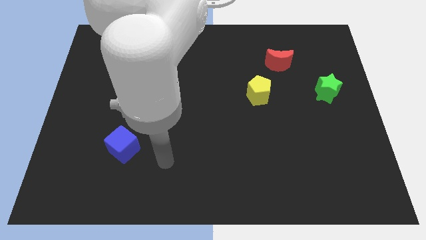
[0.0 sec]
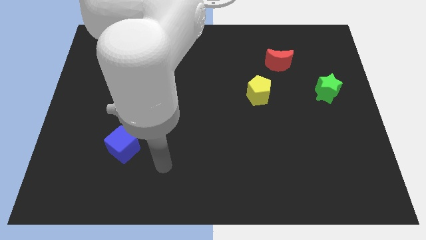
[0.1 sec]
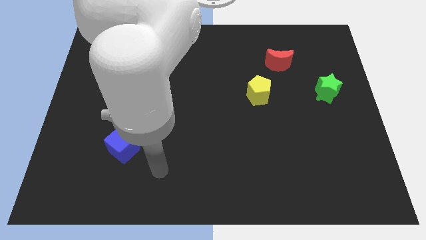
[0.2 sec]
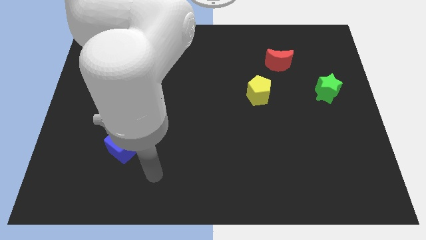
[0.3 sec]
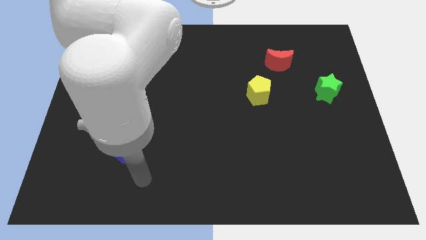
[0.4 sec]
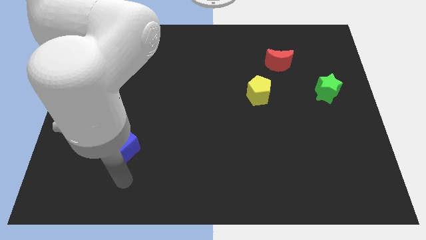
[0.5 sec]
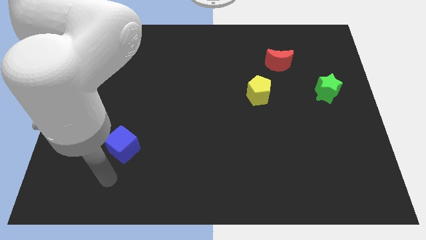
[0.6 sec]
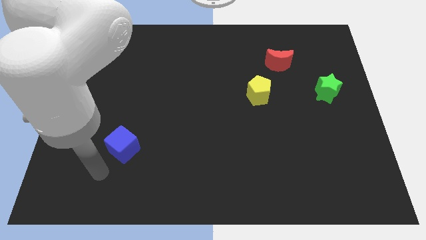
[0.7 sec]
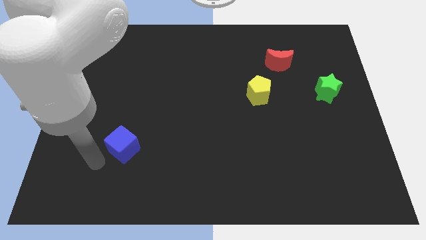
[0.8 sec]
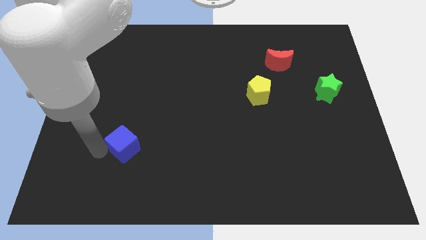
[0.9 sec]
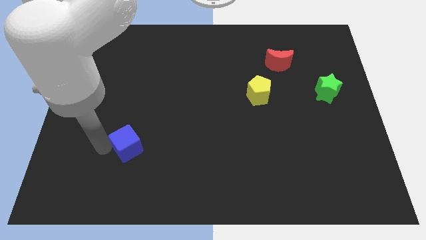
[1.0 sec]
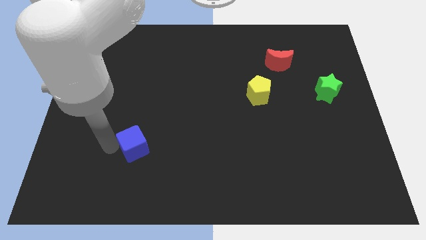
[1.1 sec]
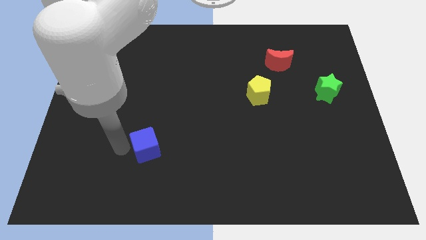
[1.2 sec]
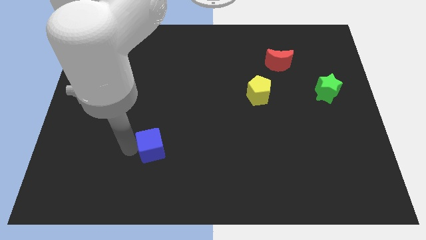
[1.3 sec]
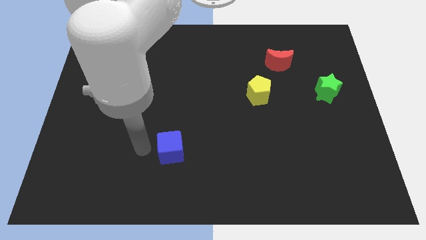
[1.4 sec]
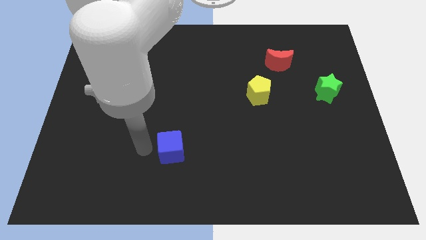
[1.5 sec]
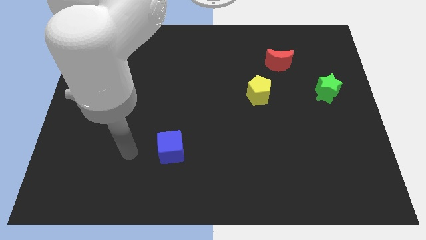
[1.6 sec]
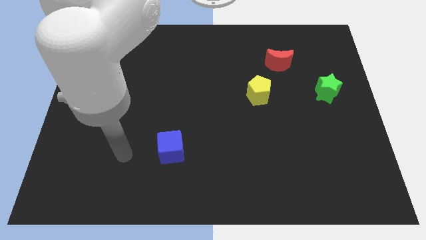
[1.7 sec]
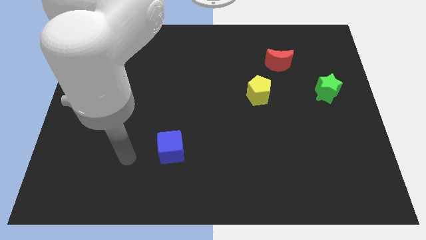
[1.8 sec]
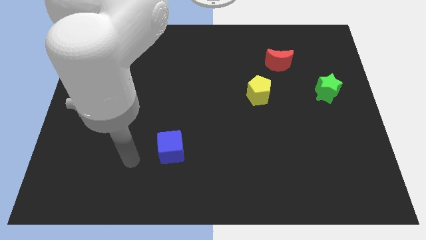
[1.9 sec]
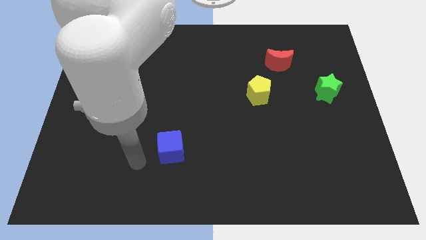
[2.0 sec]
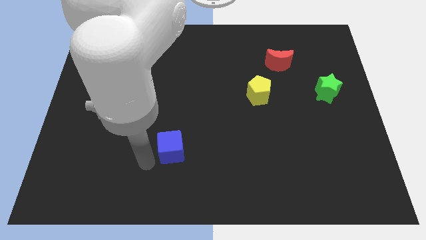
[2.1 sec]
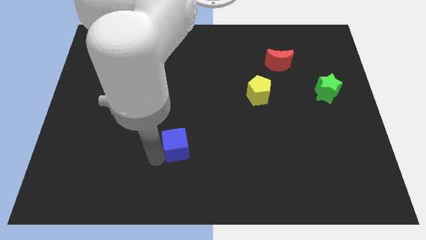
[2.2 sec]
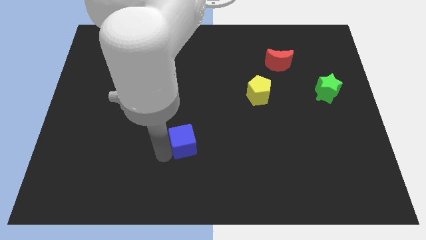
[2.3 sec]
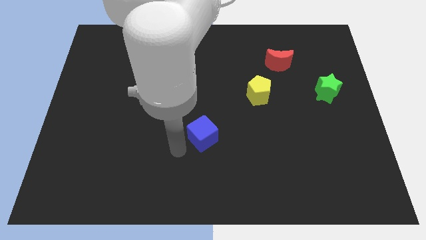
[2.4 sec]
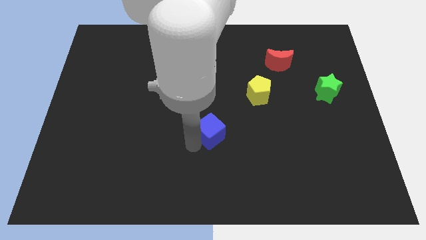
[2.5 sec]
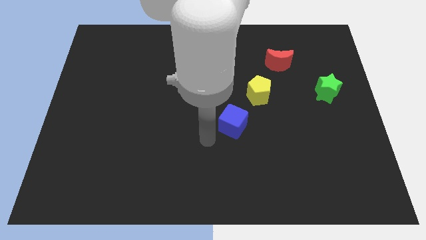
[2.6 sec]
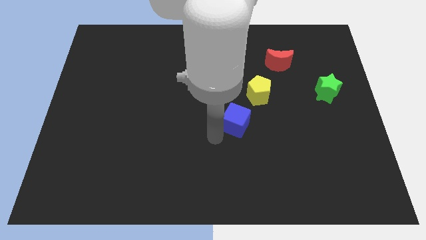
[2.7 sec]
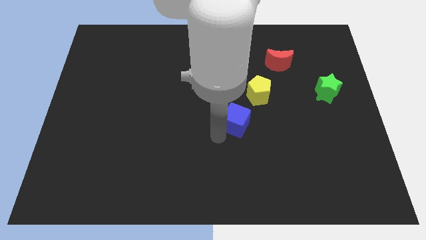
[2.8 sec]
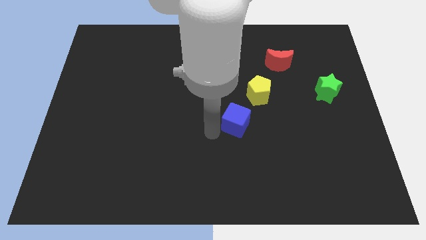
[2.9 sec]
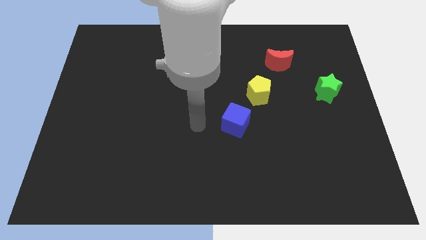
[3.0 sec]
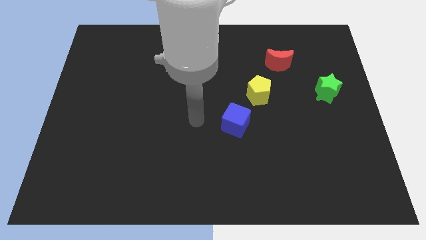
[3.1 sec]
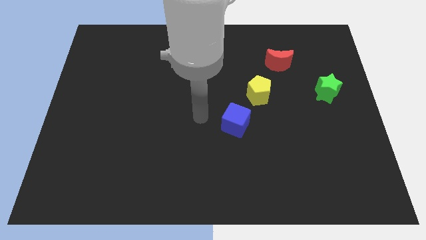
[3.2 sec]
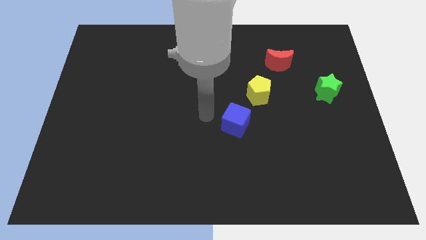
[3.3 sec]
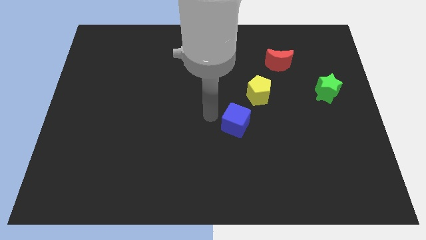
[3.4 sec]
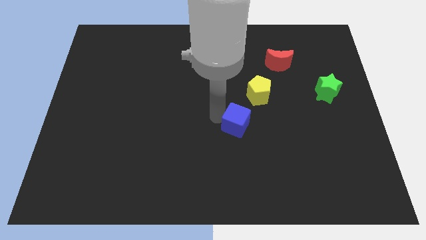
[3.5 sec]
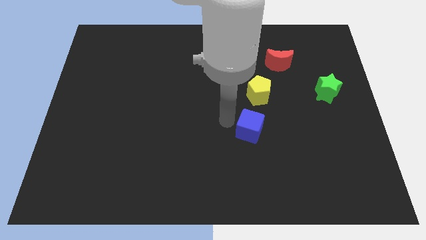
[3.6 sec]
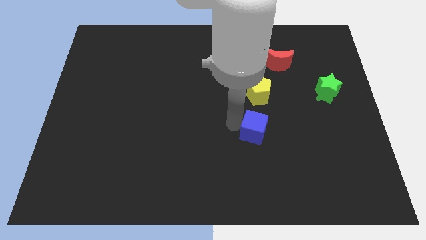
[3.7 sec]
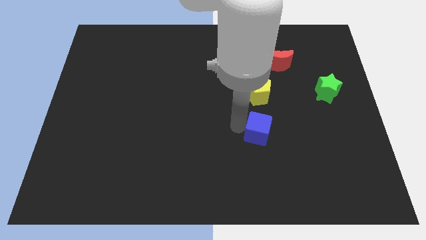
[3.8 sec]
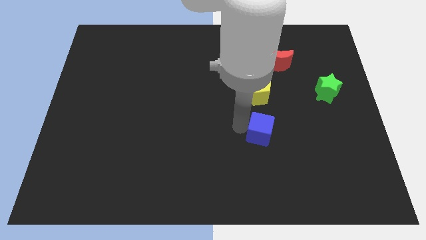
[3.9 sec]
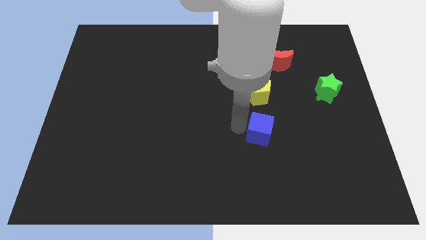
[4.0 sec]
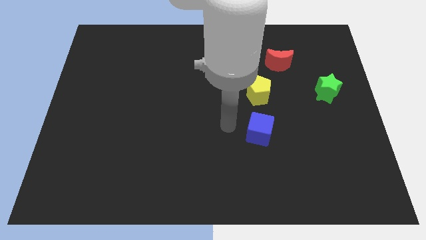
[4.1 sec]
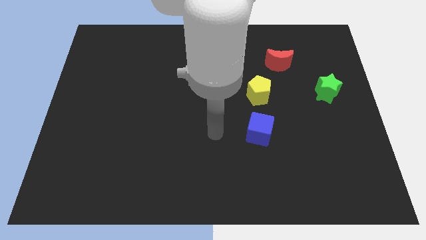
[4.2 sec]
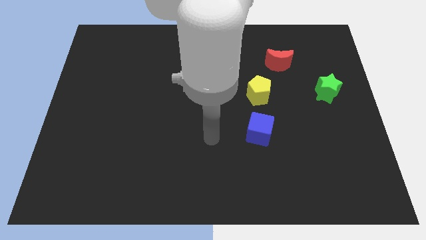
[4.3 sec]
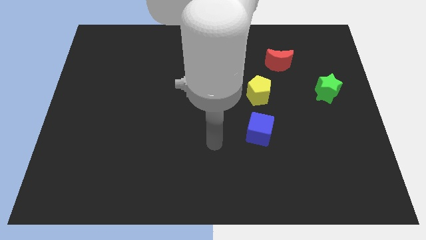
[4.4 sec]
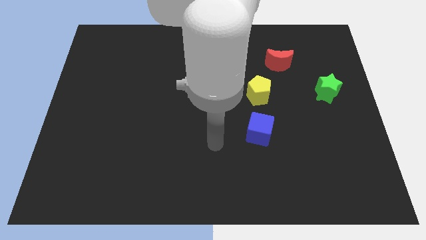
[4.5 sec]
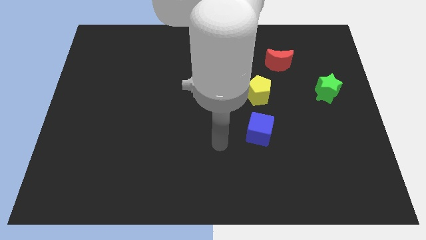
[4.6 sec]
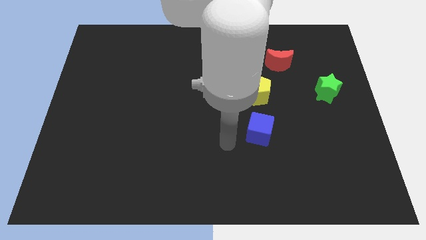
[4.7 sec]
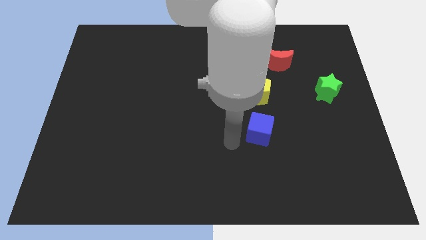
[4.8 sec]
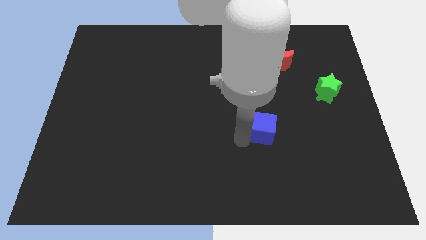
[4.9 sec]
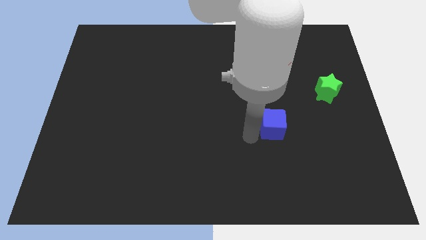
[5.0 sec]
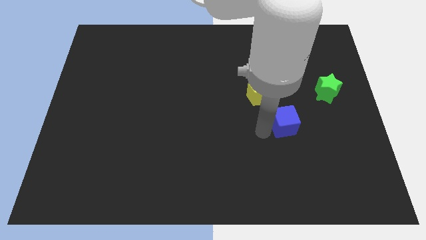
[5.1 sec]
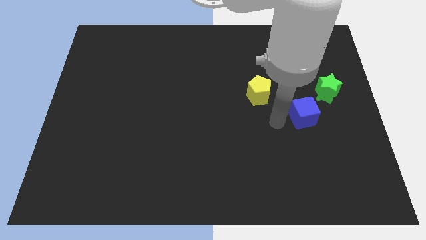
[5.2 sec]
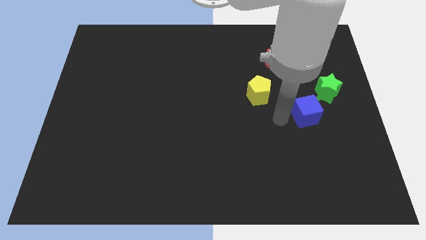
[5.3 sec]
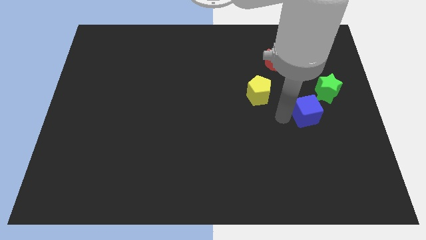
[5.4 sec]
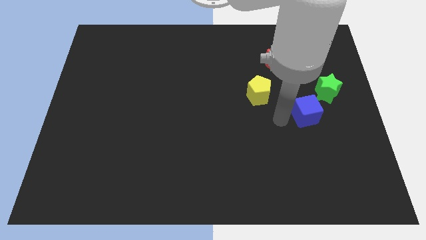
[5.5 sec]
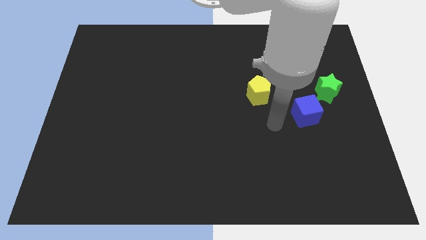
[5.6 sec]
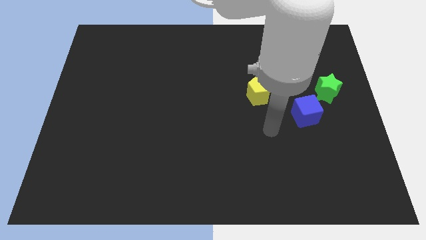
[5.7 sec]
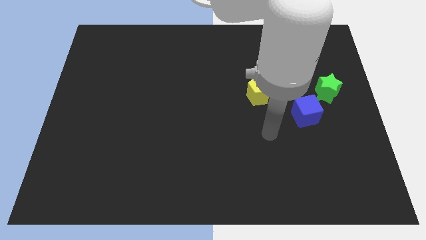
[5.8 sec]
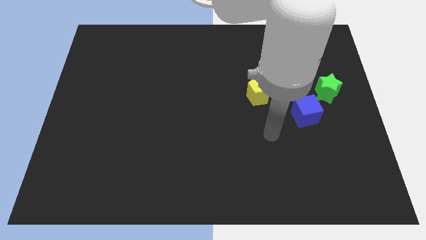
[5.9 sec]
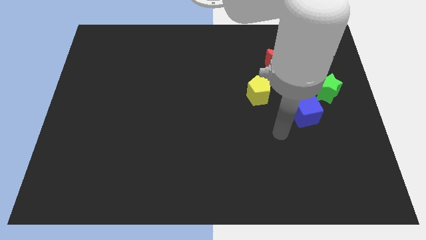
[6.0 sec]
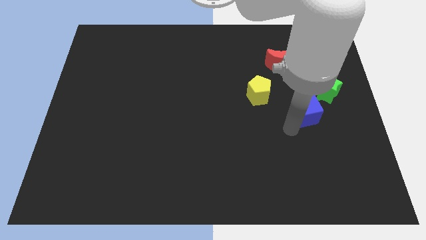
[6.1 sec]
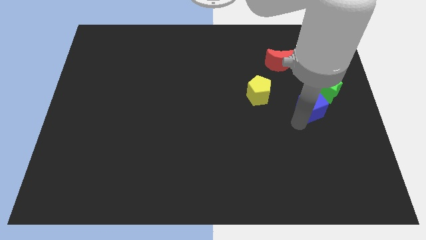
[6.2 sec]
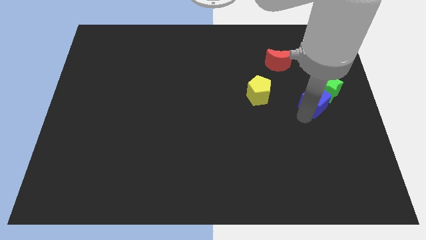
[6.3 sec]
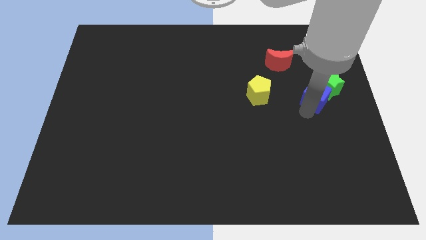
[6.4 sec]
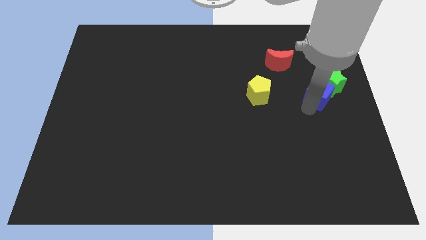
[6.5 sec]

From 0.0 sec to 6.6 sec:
put the blue cube close to the green block

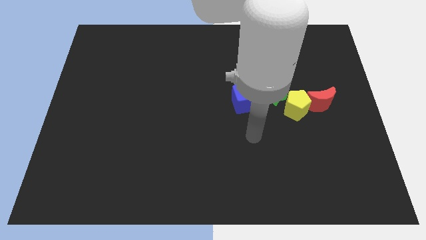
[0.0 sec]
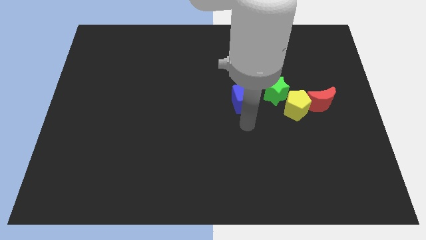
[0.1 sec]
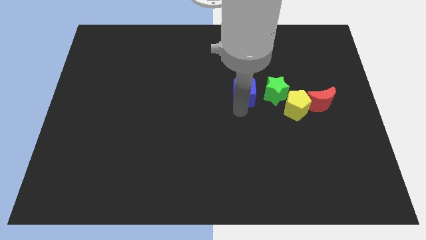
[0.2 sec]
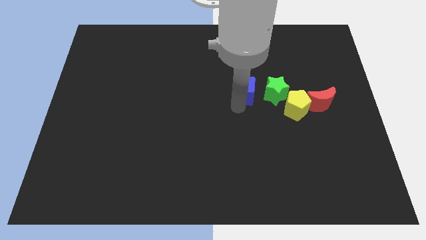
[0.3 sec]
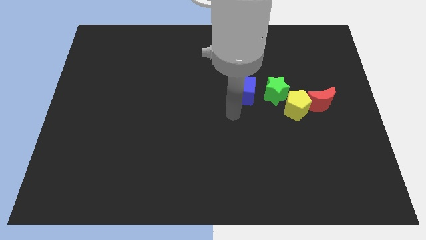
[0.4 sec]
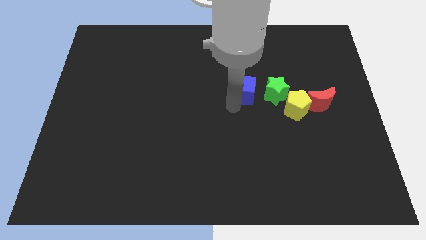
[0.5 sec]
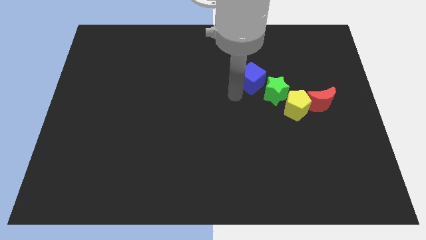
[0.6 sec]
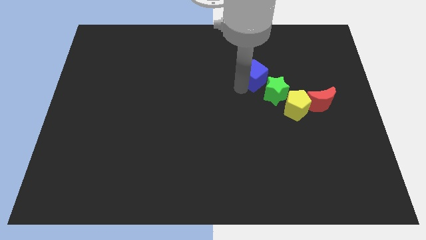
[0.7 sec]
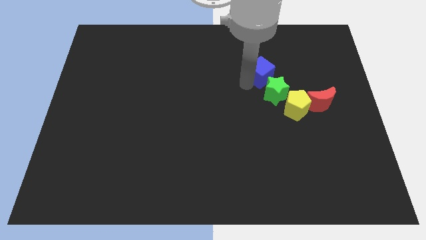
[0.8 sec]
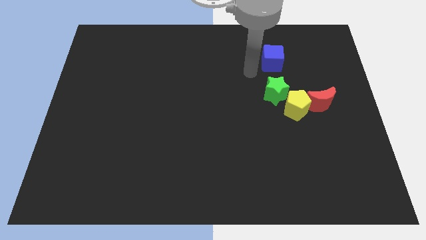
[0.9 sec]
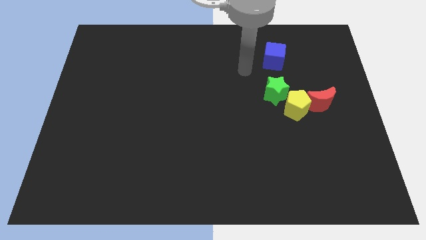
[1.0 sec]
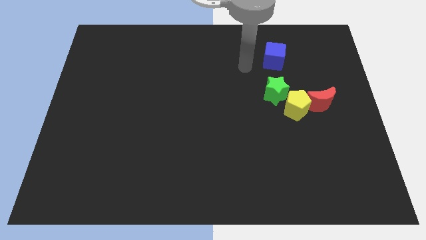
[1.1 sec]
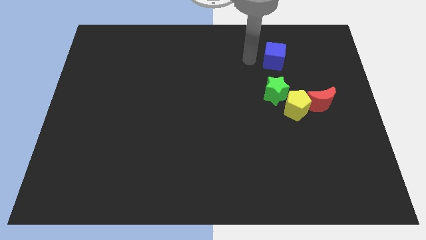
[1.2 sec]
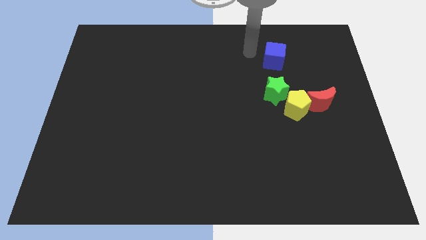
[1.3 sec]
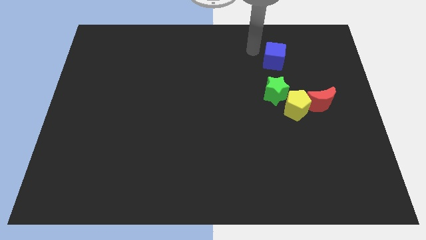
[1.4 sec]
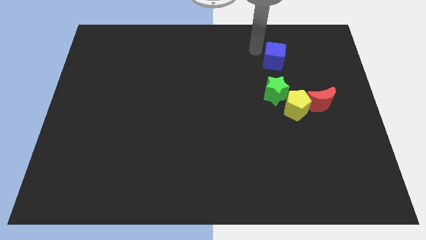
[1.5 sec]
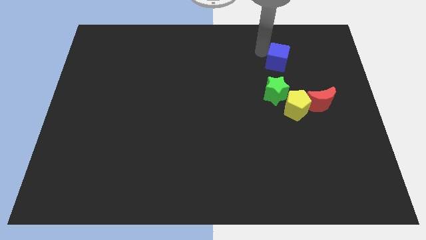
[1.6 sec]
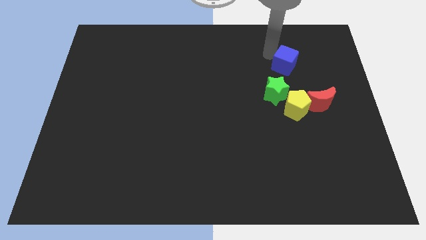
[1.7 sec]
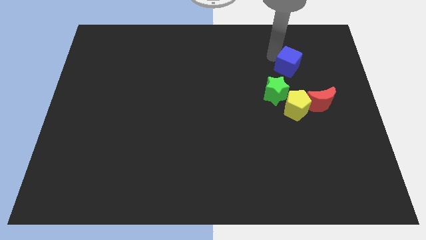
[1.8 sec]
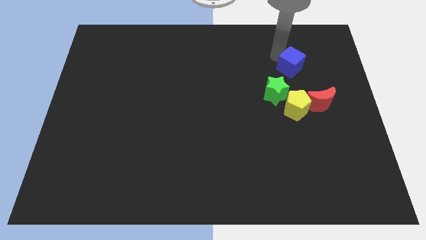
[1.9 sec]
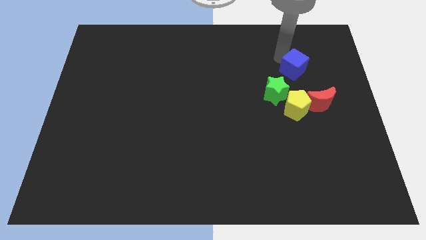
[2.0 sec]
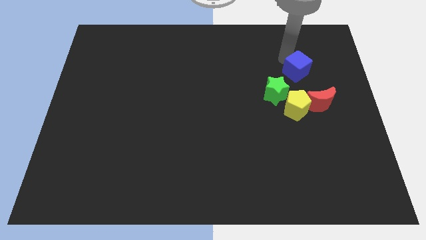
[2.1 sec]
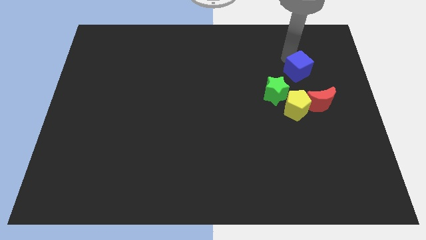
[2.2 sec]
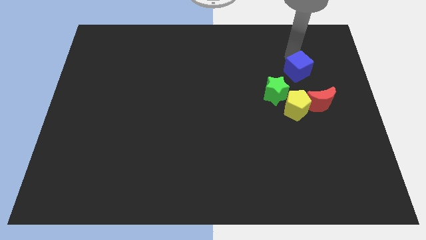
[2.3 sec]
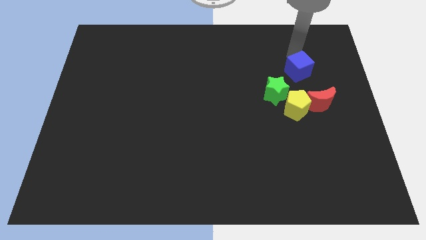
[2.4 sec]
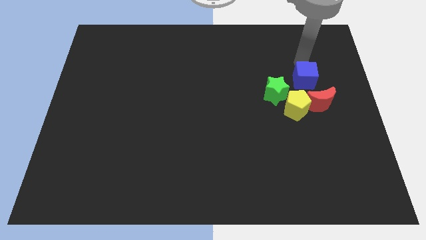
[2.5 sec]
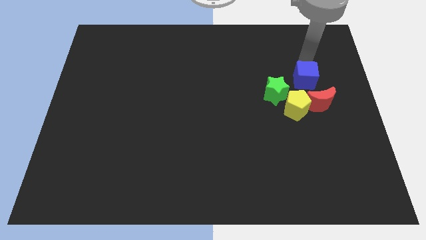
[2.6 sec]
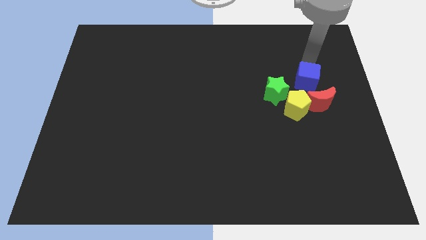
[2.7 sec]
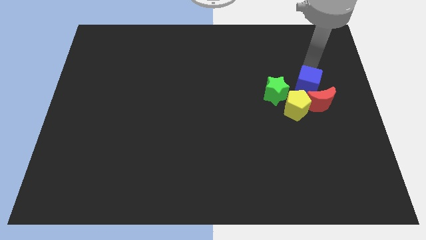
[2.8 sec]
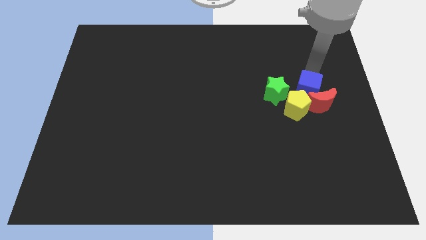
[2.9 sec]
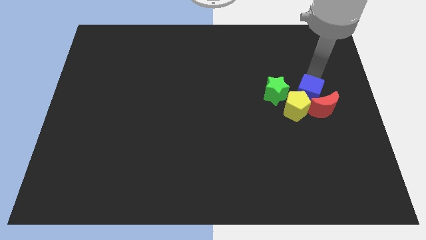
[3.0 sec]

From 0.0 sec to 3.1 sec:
move the blue block next to the red block
